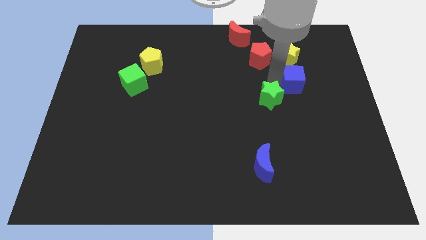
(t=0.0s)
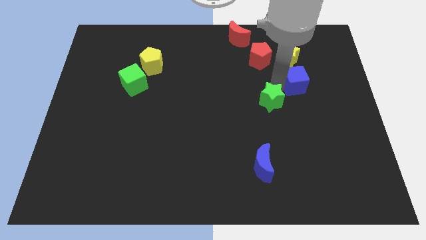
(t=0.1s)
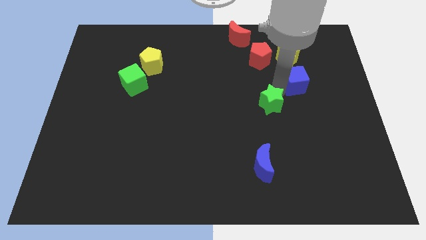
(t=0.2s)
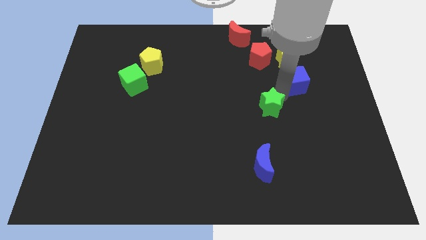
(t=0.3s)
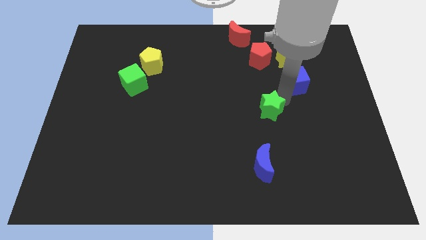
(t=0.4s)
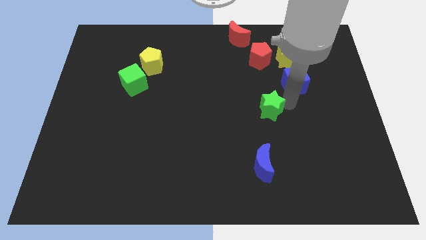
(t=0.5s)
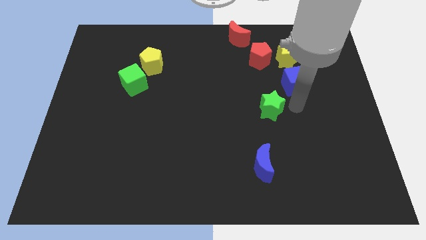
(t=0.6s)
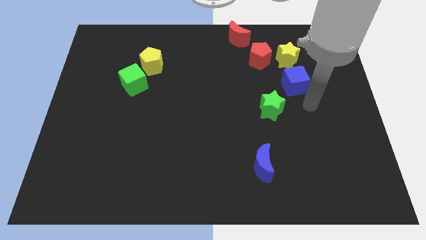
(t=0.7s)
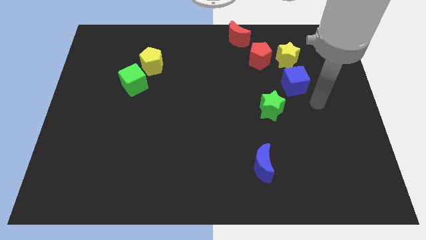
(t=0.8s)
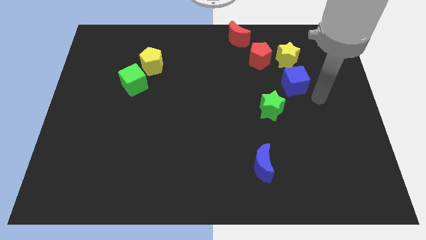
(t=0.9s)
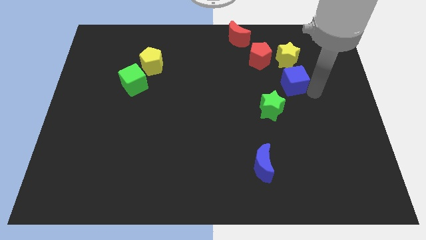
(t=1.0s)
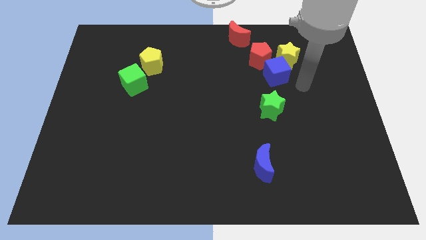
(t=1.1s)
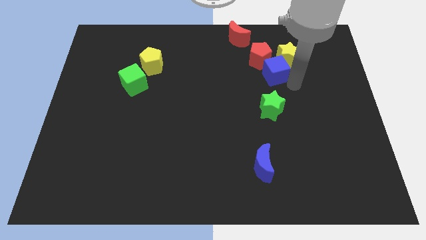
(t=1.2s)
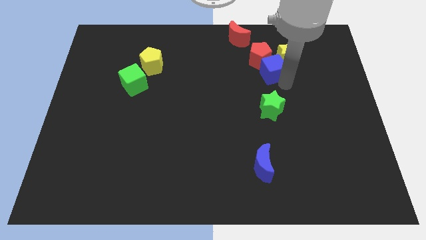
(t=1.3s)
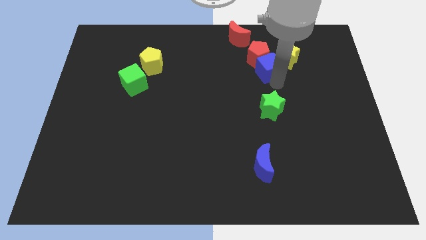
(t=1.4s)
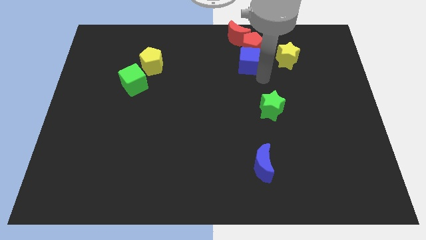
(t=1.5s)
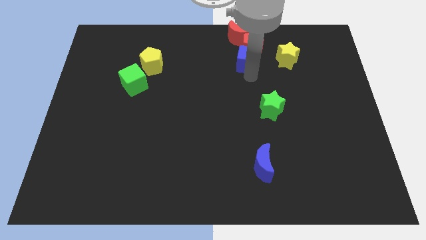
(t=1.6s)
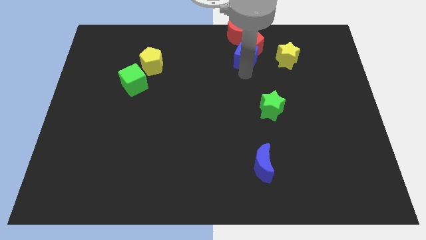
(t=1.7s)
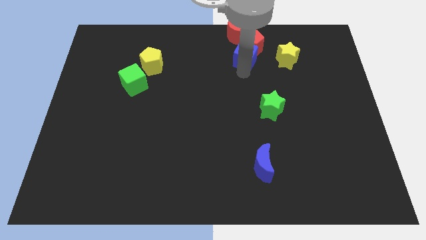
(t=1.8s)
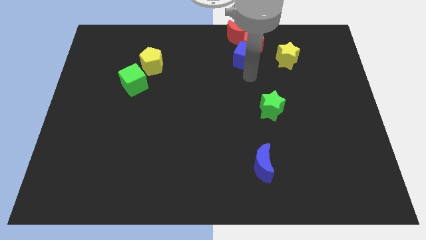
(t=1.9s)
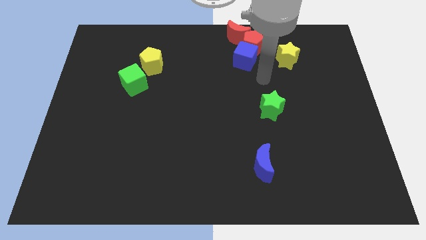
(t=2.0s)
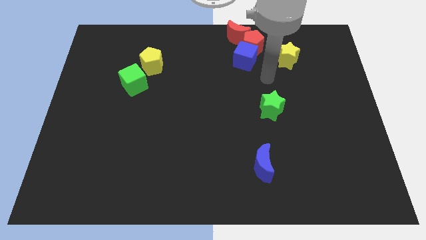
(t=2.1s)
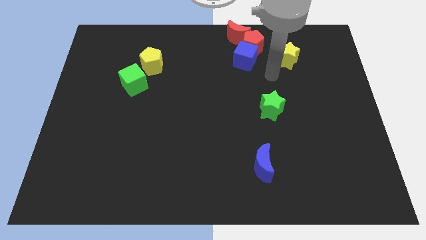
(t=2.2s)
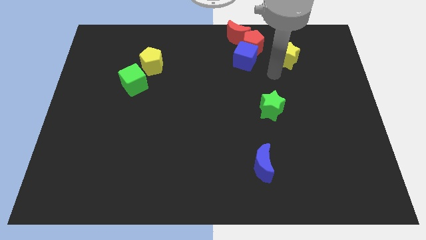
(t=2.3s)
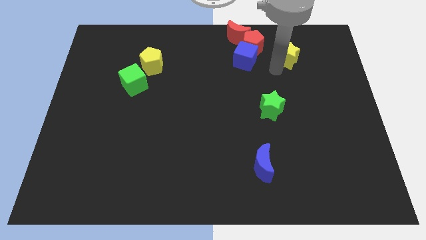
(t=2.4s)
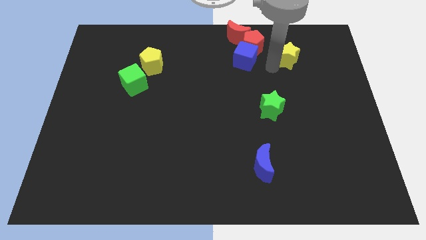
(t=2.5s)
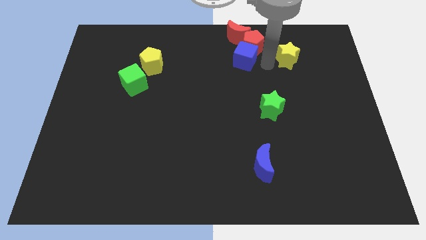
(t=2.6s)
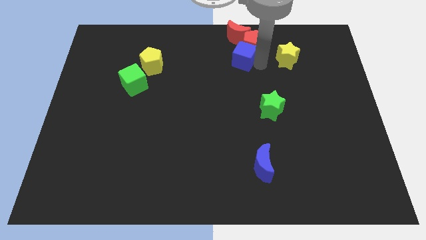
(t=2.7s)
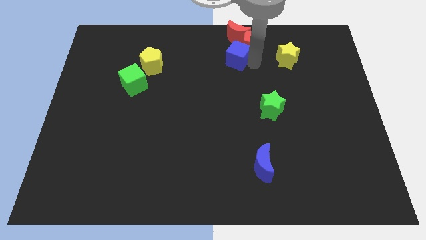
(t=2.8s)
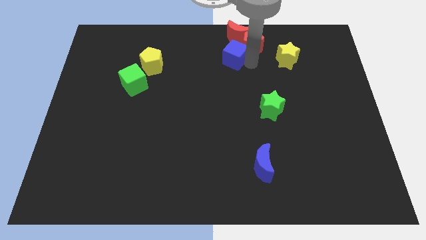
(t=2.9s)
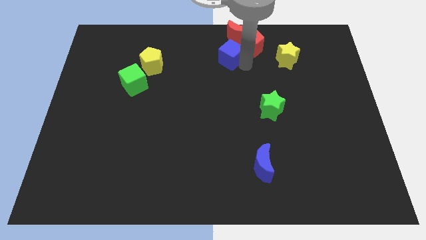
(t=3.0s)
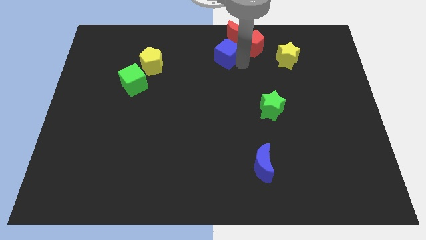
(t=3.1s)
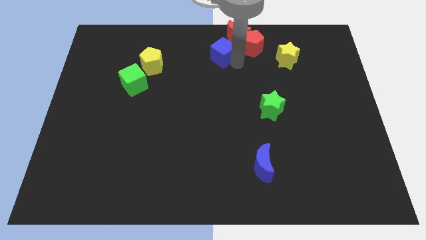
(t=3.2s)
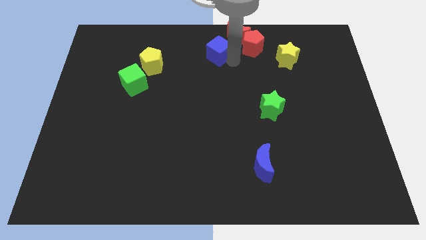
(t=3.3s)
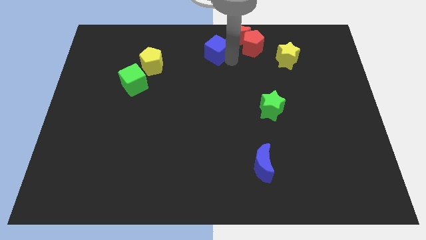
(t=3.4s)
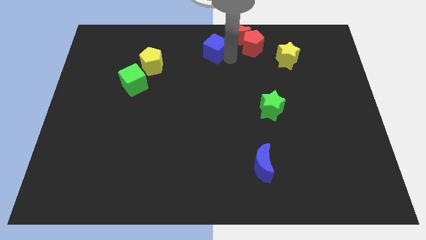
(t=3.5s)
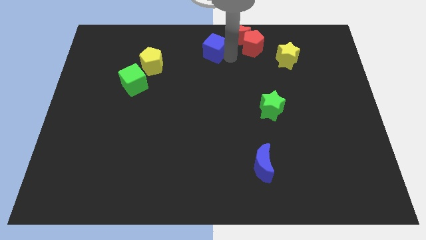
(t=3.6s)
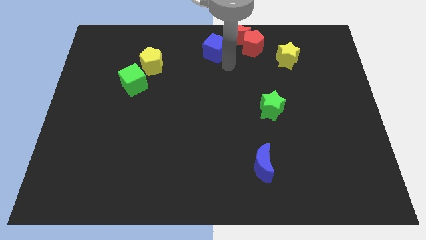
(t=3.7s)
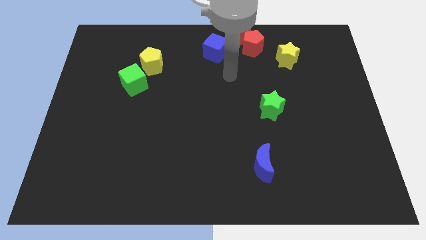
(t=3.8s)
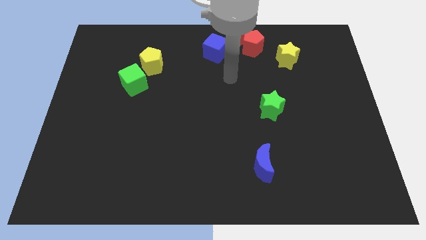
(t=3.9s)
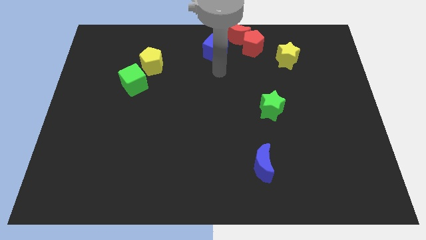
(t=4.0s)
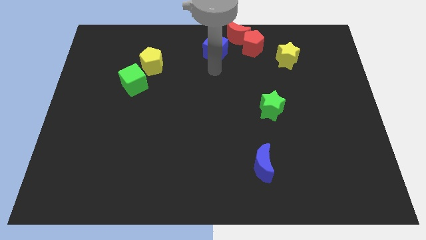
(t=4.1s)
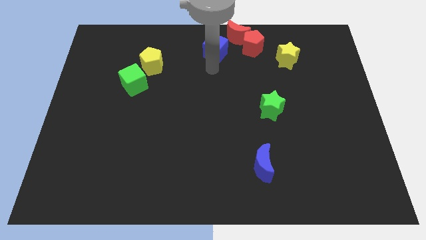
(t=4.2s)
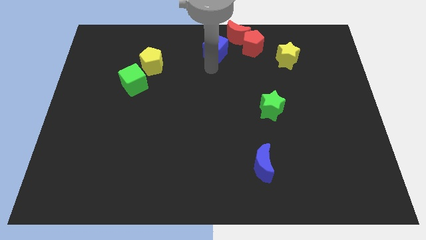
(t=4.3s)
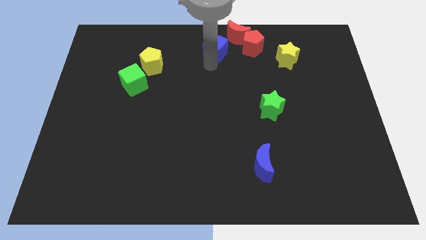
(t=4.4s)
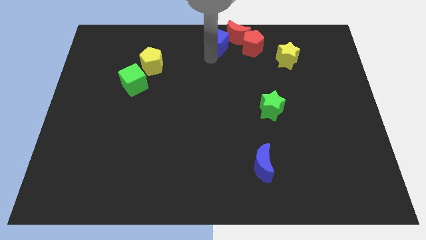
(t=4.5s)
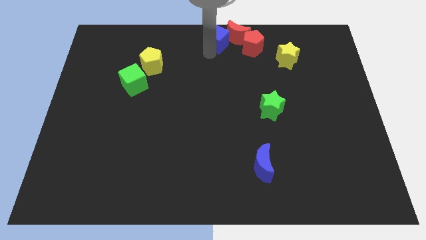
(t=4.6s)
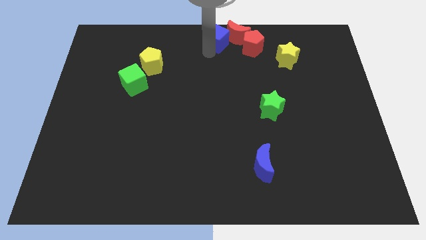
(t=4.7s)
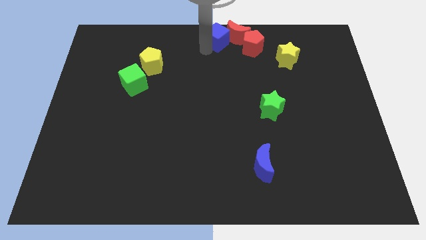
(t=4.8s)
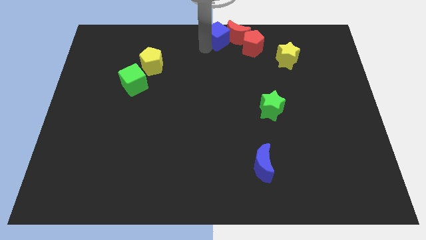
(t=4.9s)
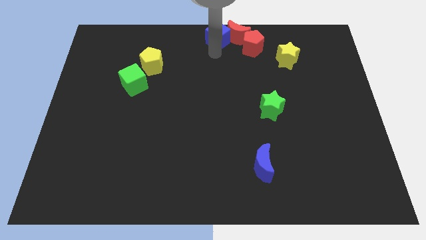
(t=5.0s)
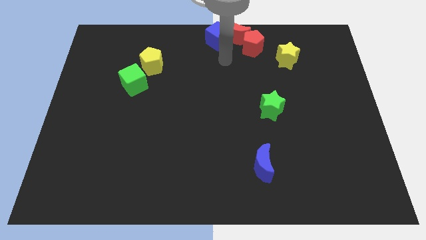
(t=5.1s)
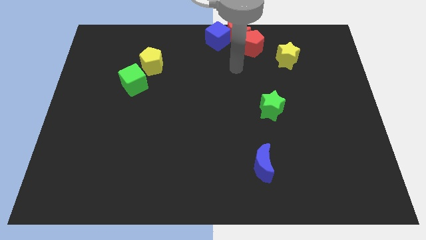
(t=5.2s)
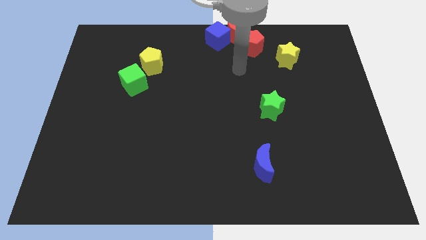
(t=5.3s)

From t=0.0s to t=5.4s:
place the blue cube to the center of the board

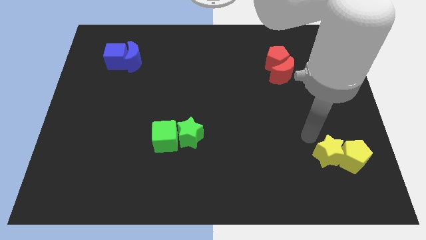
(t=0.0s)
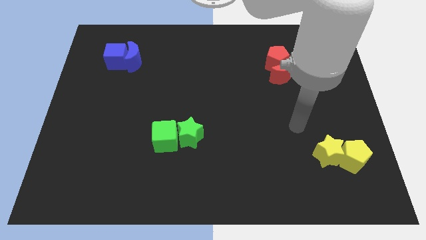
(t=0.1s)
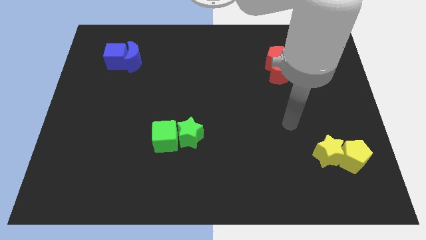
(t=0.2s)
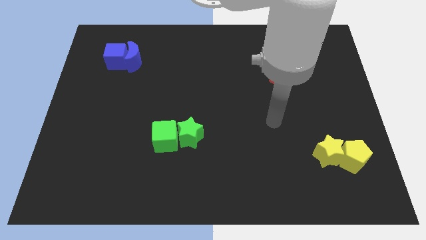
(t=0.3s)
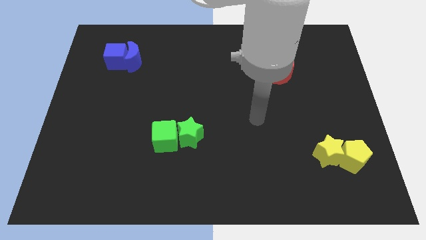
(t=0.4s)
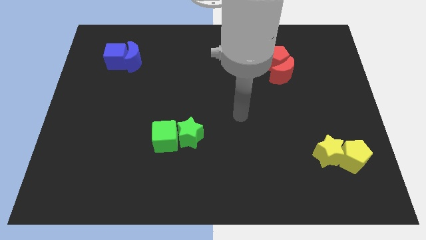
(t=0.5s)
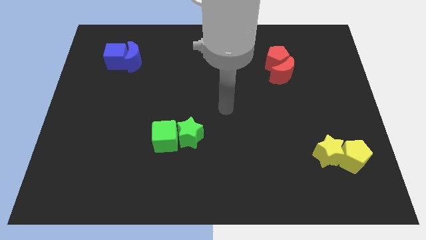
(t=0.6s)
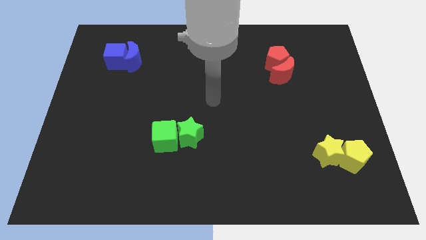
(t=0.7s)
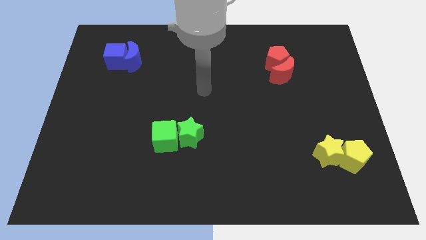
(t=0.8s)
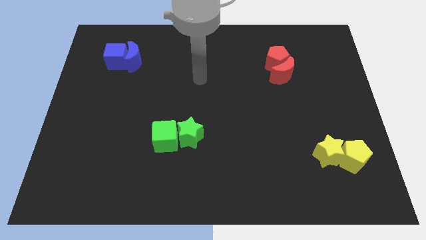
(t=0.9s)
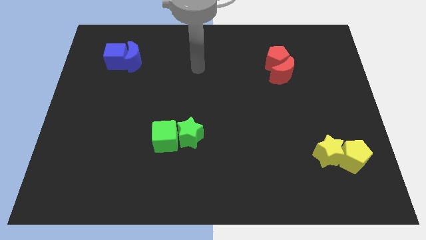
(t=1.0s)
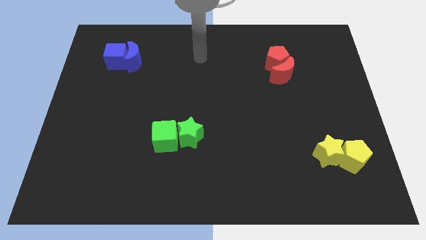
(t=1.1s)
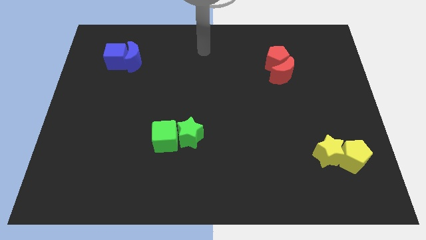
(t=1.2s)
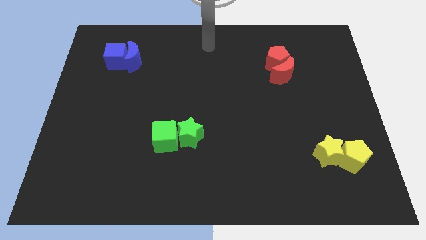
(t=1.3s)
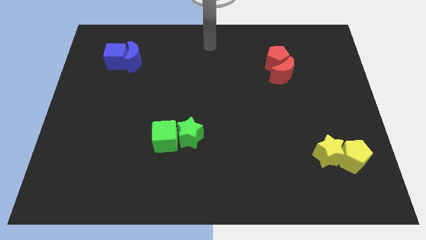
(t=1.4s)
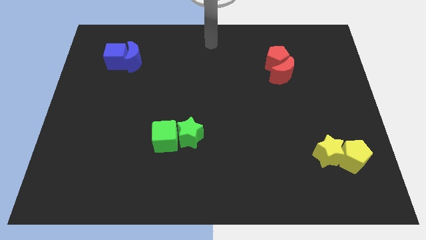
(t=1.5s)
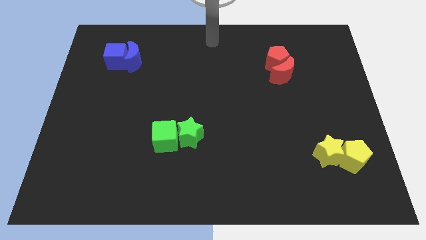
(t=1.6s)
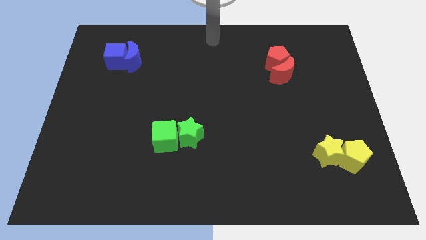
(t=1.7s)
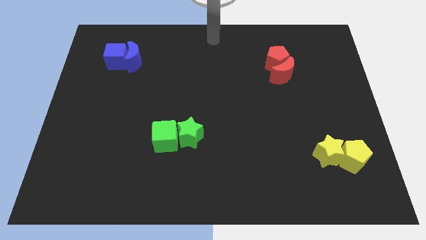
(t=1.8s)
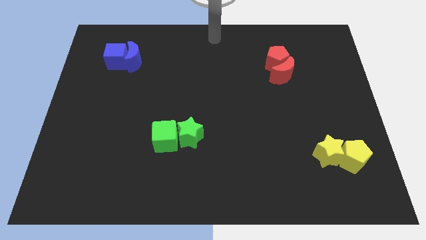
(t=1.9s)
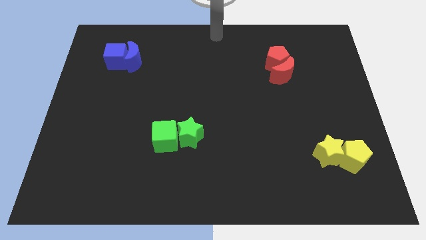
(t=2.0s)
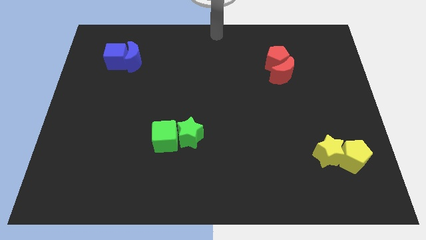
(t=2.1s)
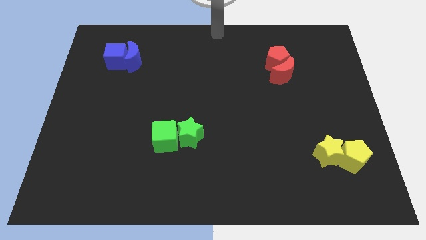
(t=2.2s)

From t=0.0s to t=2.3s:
move your arm towards the top center of the board

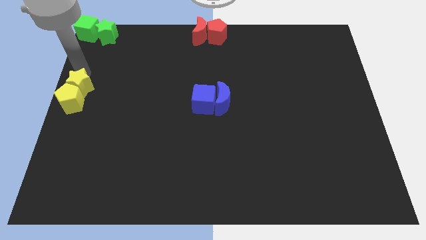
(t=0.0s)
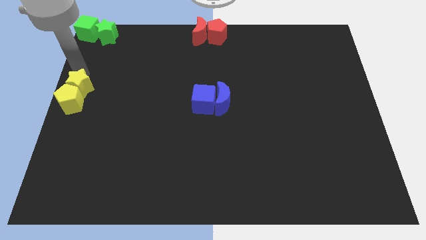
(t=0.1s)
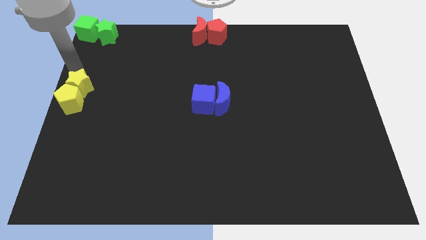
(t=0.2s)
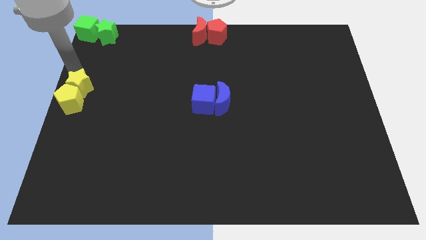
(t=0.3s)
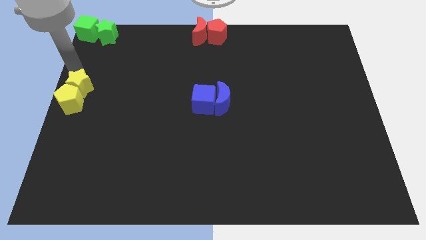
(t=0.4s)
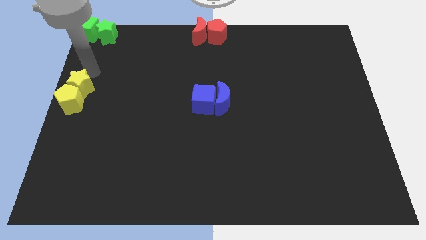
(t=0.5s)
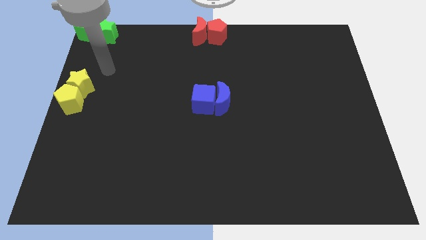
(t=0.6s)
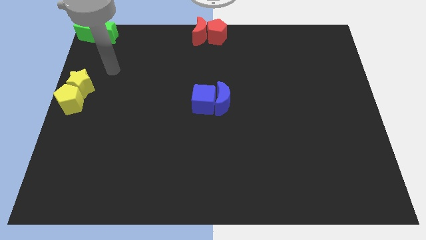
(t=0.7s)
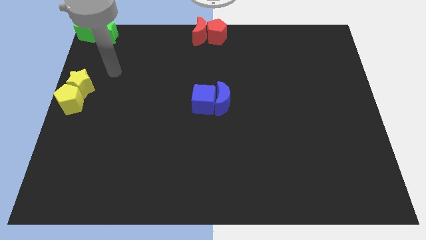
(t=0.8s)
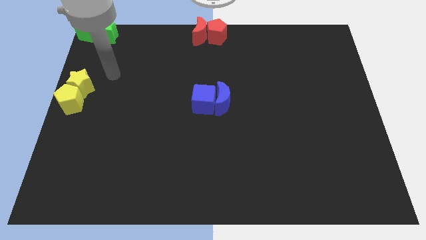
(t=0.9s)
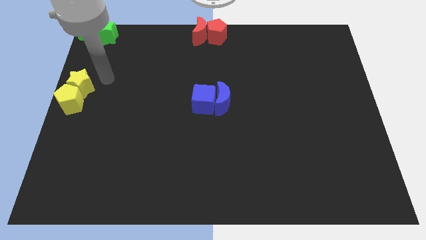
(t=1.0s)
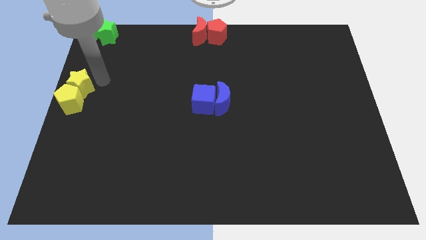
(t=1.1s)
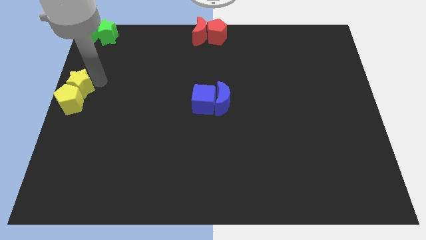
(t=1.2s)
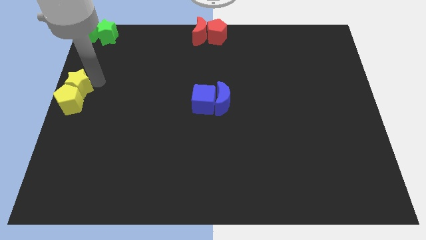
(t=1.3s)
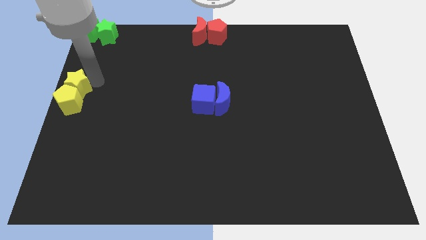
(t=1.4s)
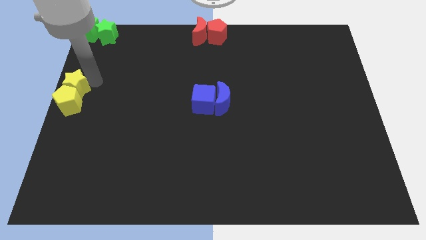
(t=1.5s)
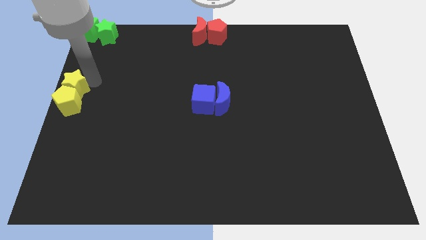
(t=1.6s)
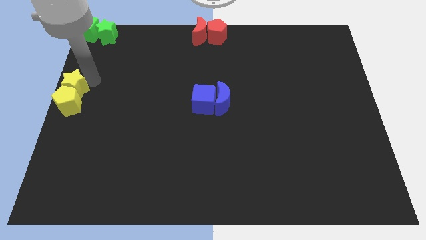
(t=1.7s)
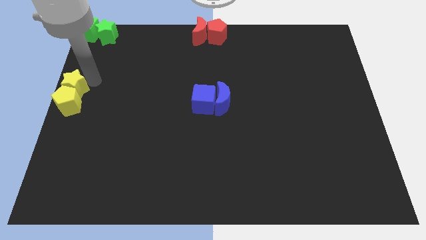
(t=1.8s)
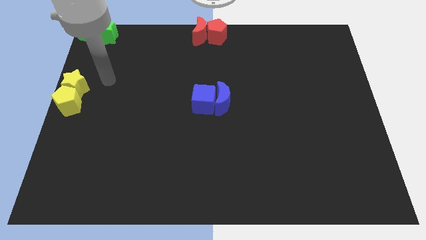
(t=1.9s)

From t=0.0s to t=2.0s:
slide the yellow blocks to the centre left of the board
